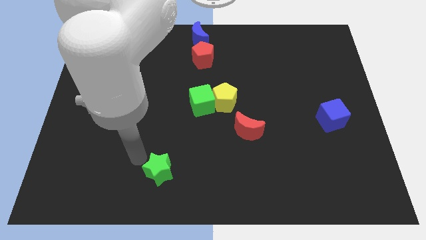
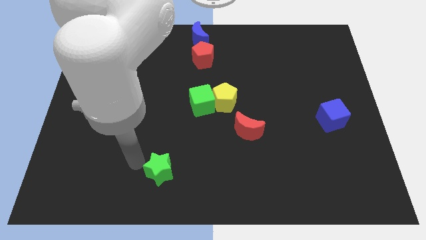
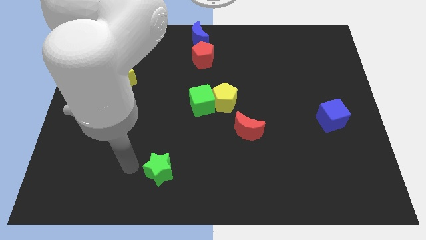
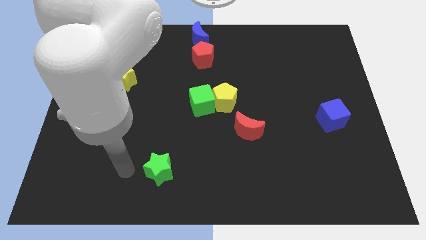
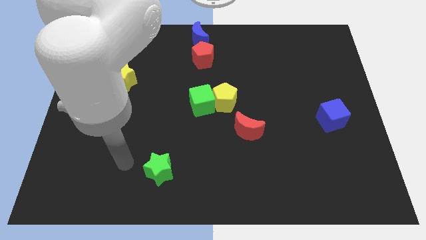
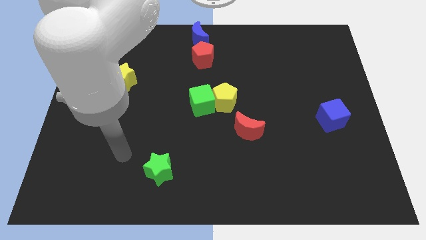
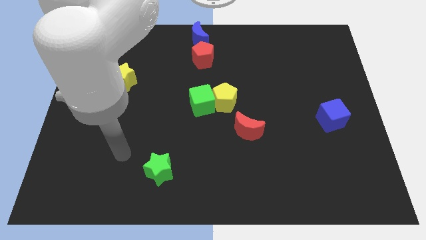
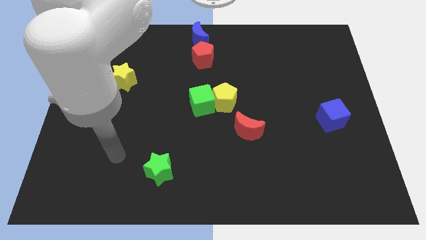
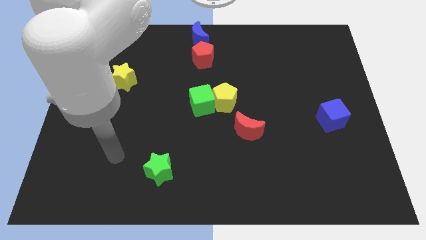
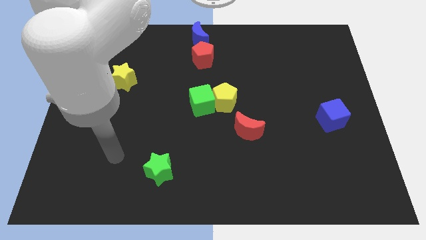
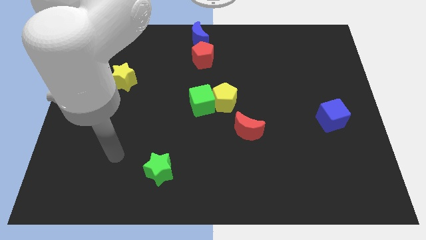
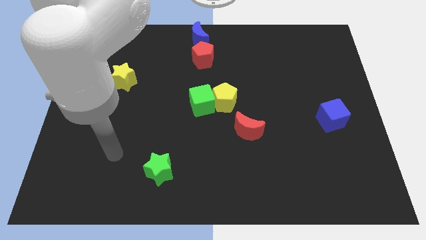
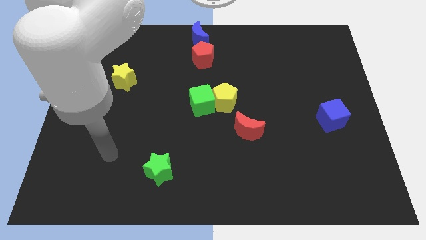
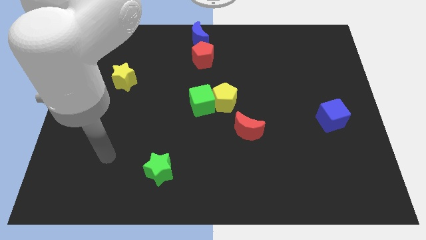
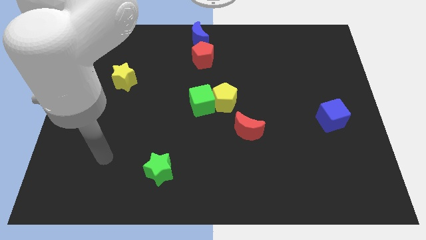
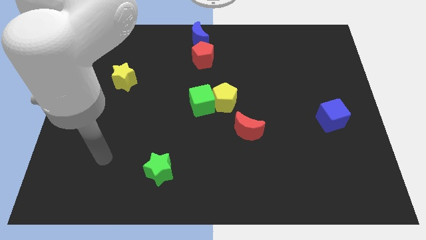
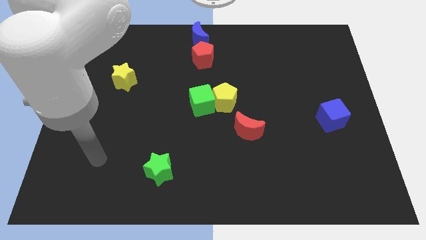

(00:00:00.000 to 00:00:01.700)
go away from the green star

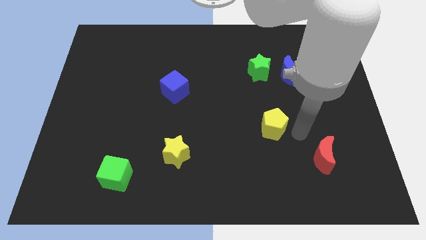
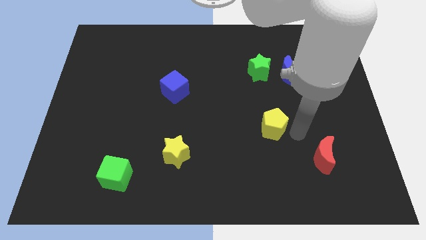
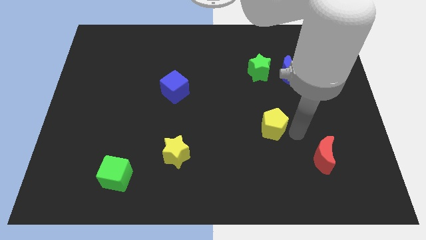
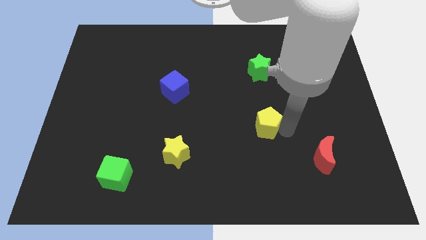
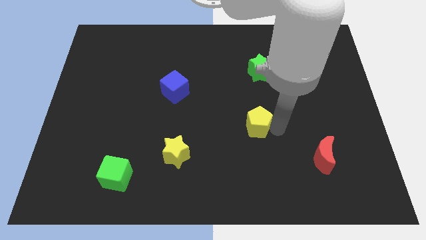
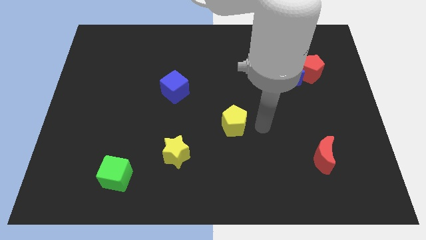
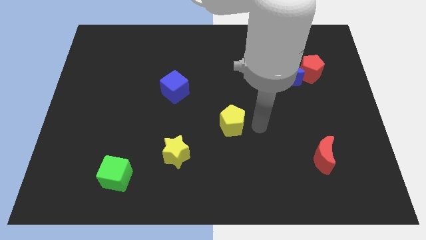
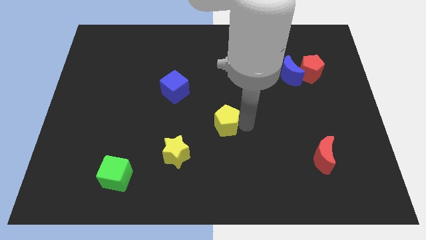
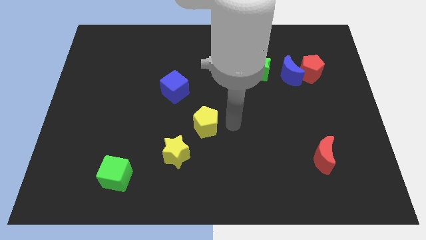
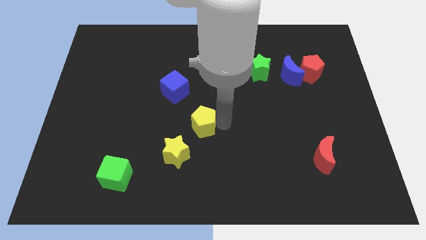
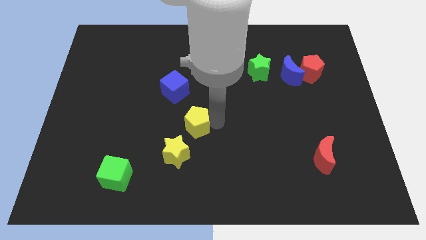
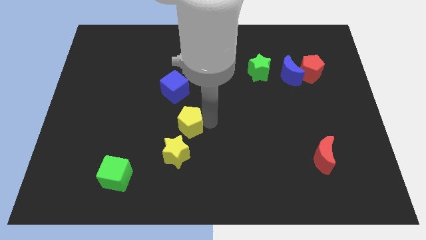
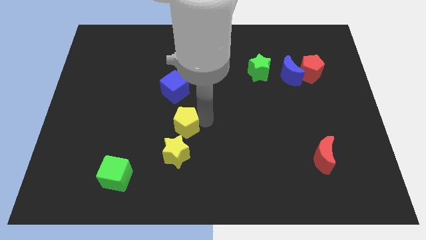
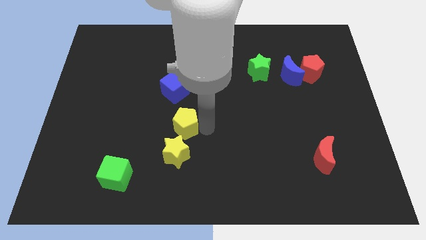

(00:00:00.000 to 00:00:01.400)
move the yellow pentagon to the top of the yellow star

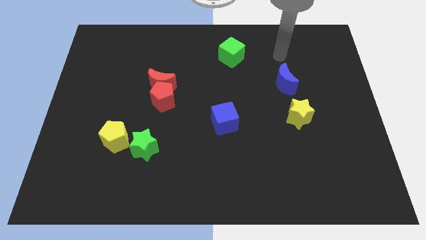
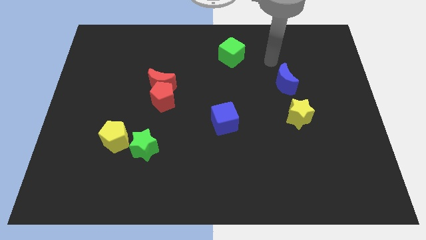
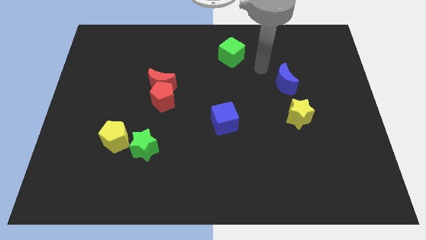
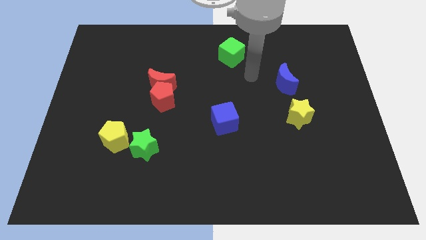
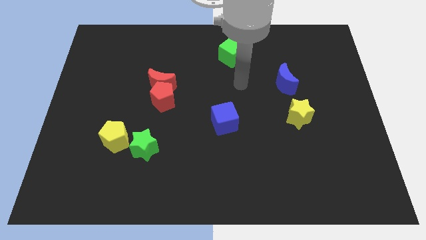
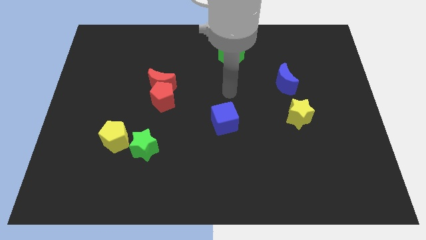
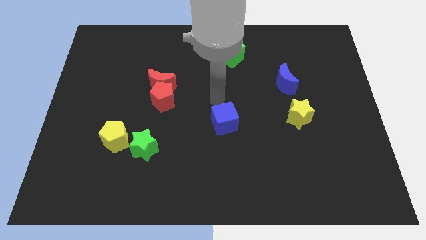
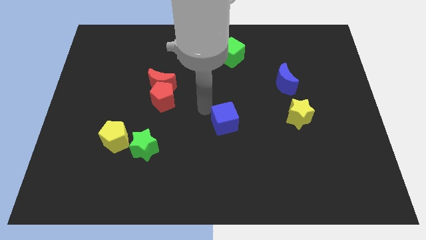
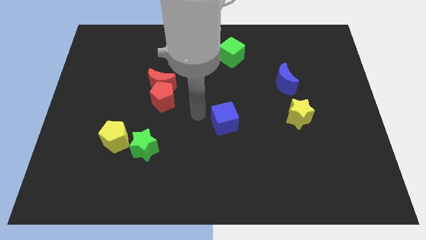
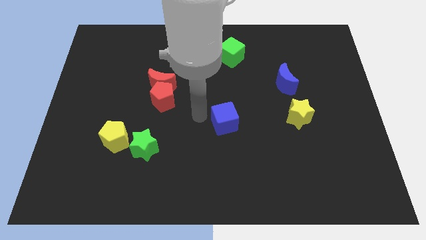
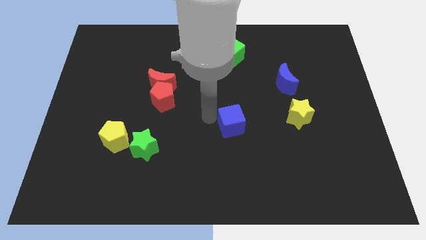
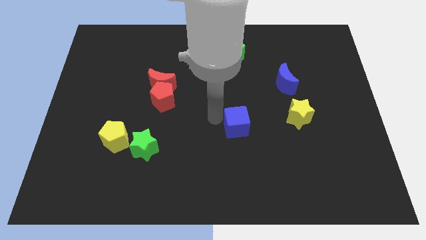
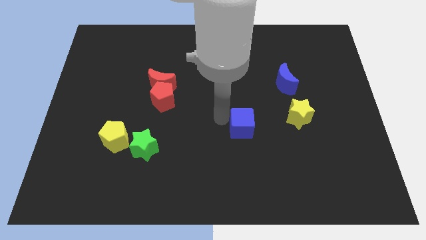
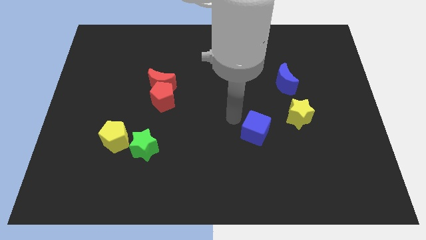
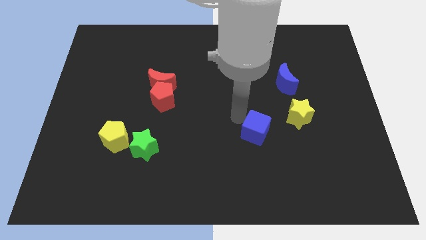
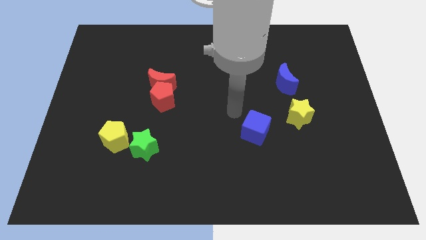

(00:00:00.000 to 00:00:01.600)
push the blue cube towards the bottom side of the board

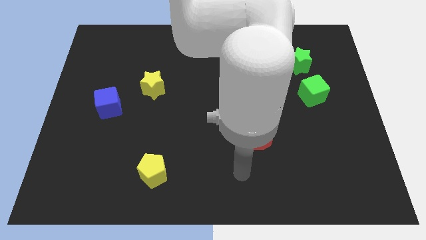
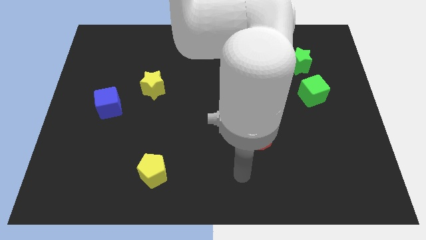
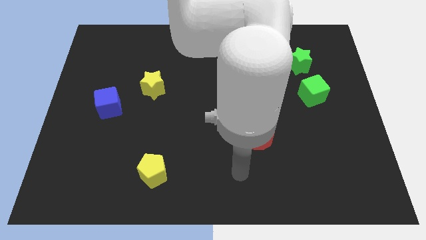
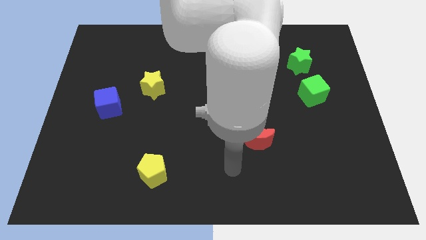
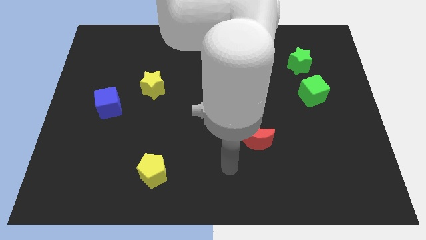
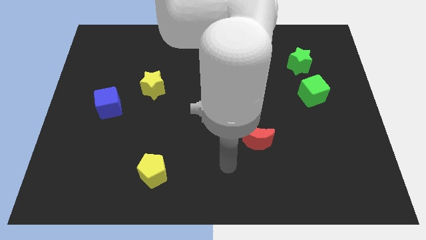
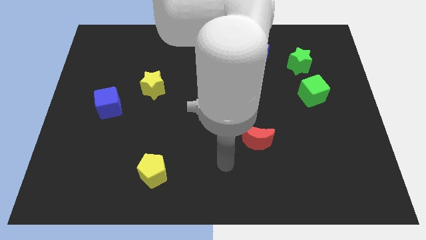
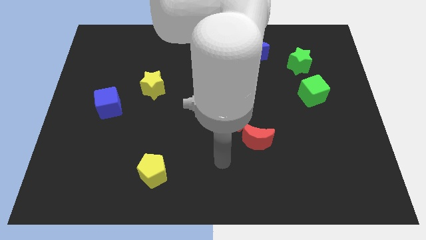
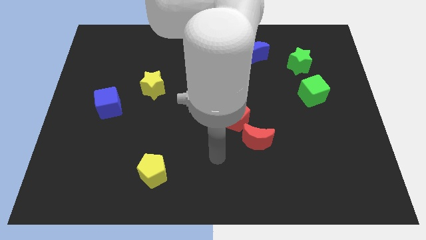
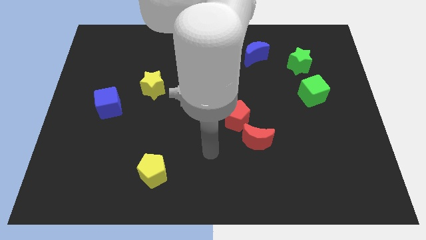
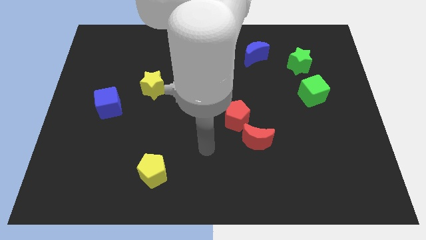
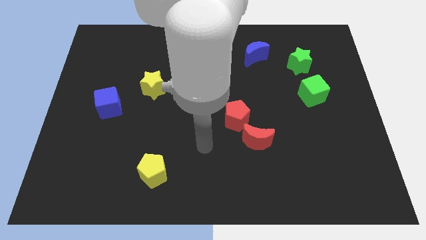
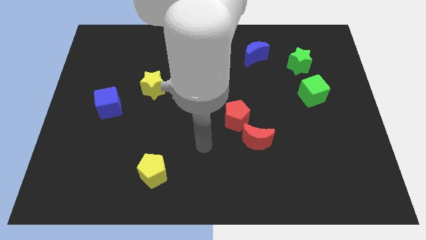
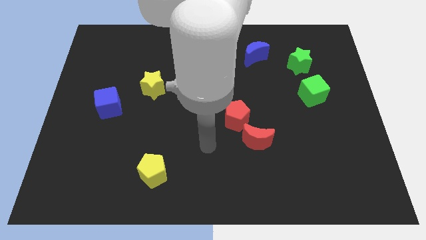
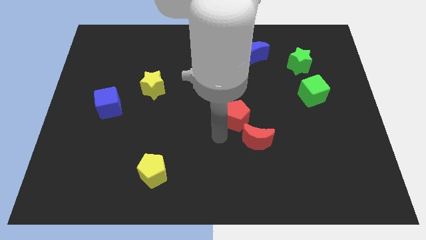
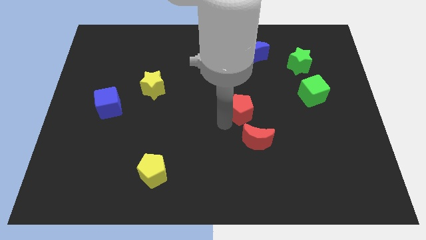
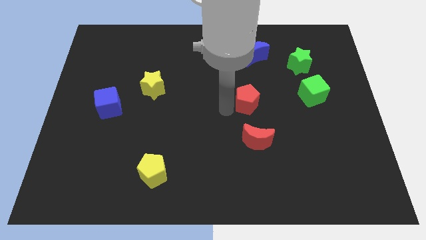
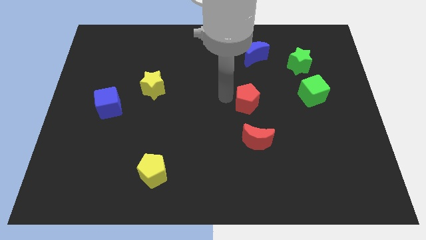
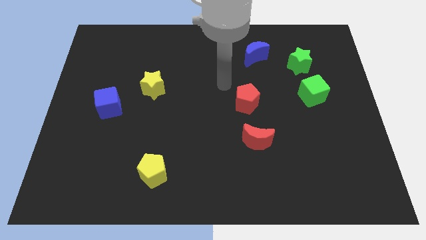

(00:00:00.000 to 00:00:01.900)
separate red pentagon from the red moon

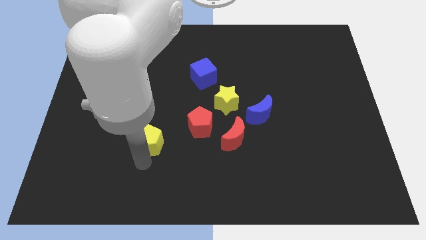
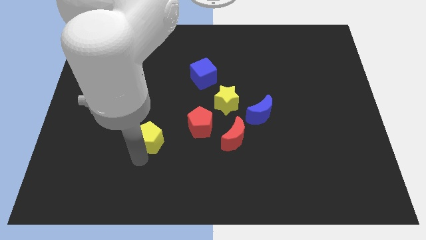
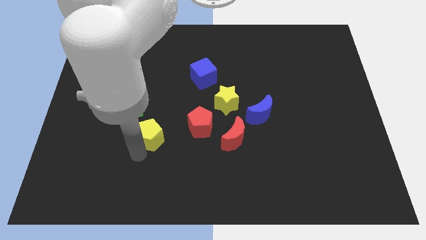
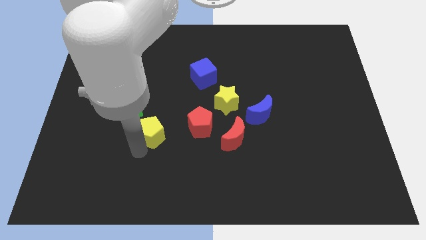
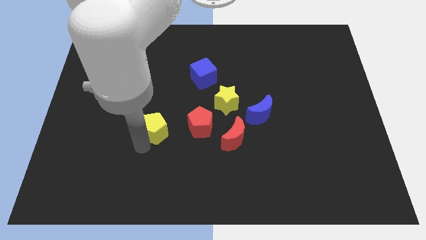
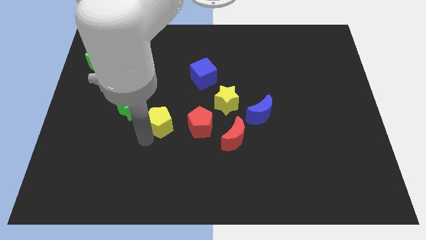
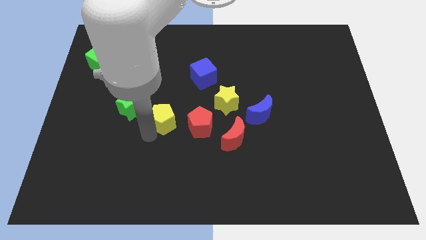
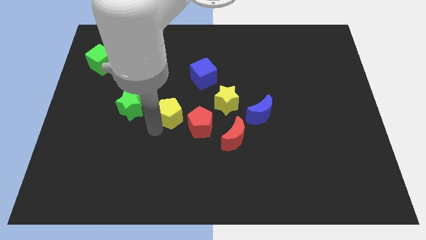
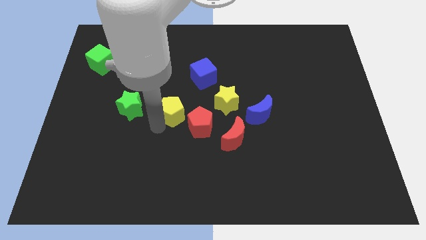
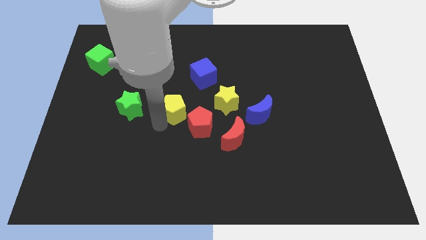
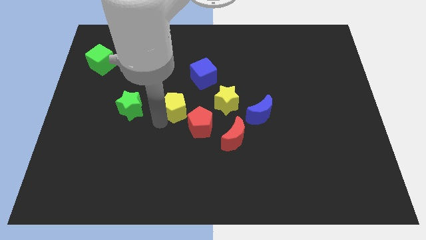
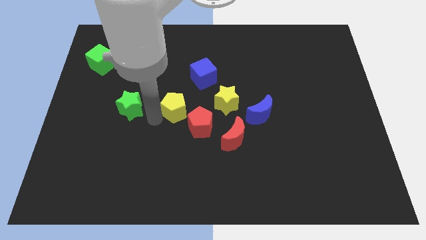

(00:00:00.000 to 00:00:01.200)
place the yellow pentagon above the red pentagon

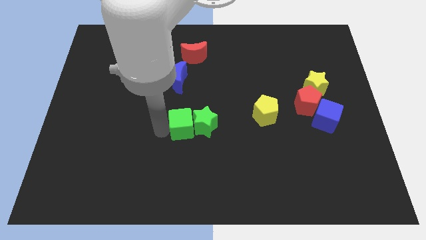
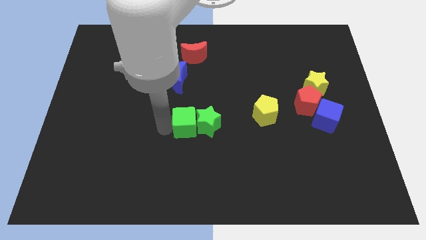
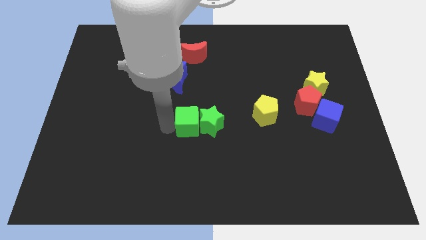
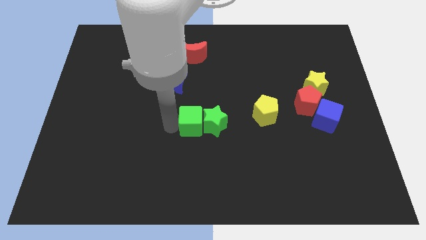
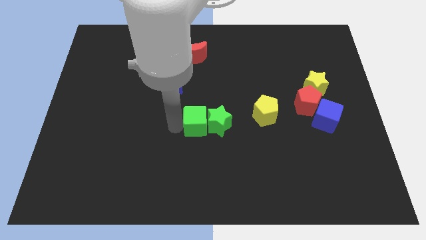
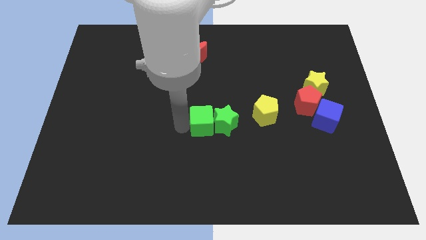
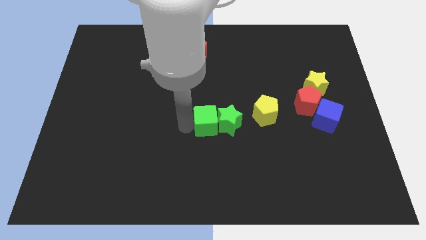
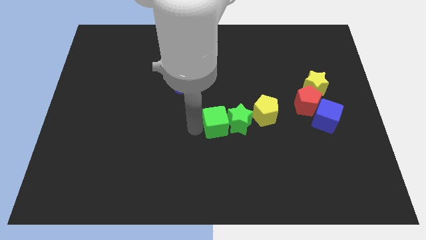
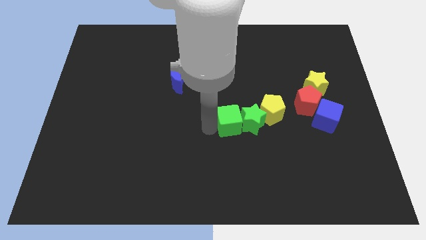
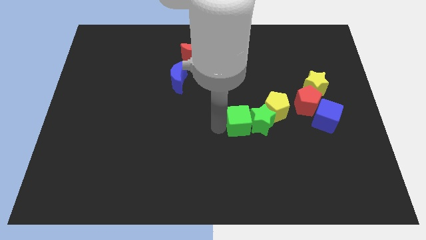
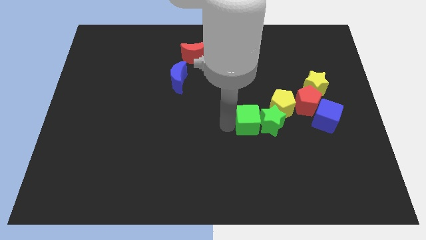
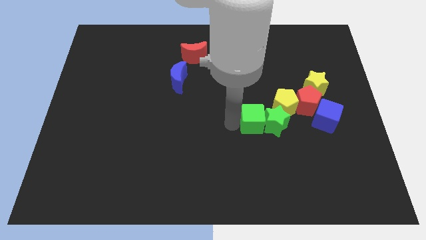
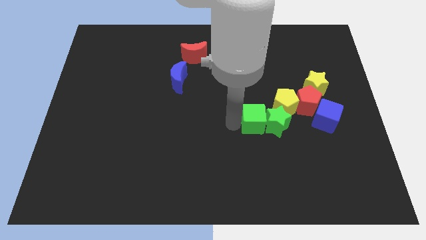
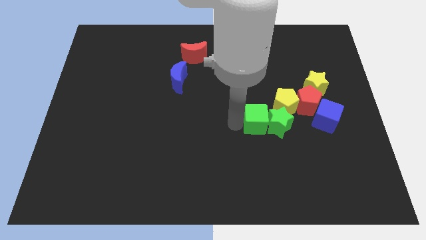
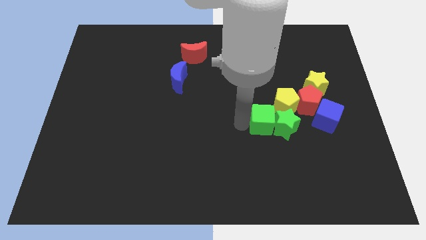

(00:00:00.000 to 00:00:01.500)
move the green star with the green cube into the yellow pentagon
